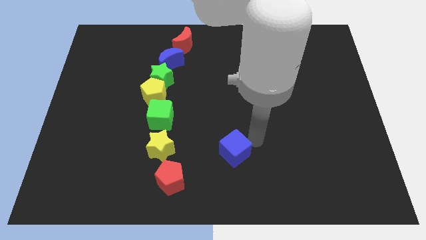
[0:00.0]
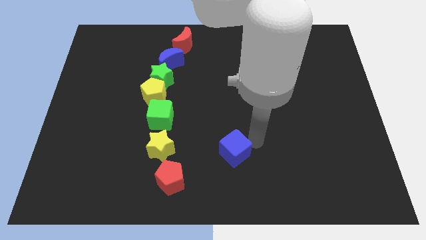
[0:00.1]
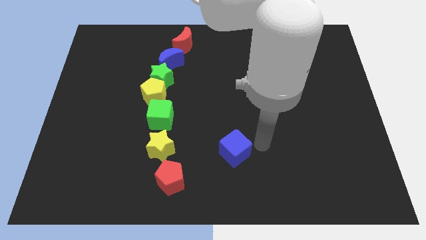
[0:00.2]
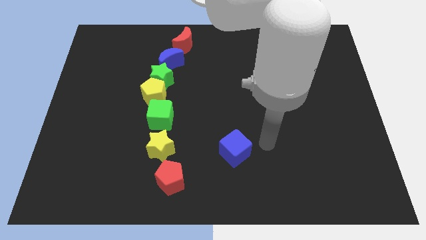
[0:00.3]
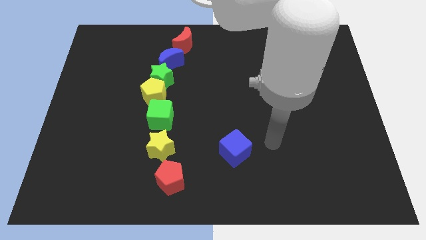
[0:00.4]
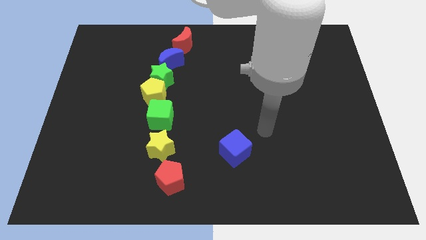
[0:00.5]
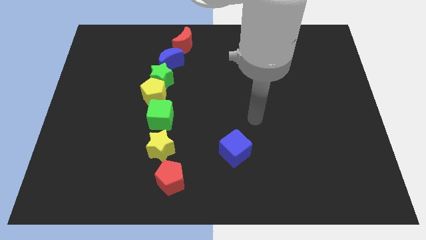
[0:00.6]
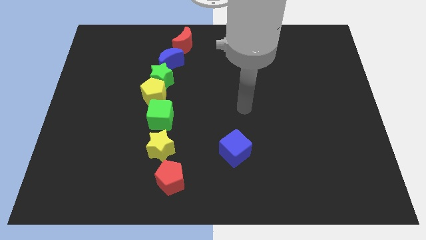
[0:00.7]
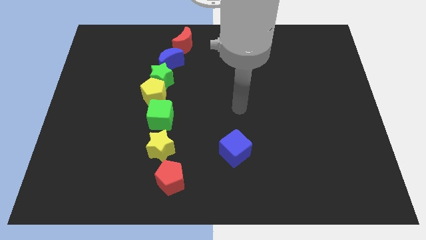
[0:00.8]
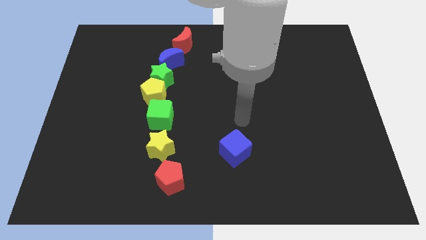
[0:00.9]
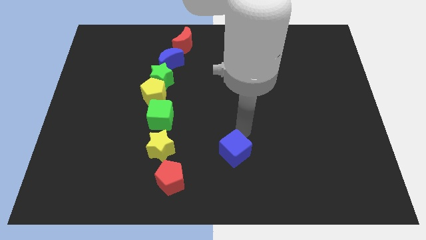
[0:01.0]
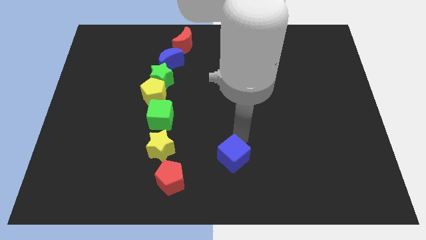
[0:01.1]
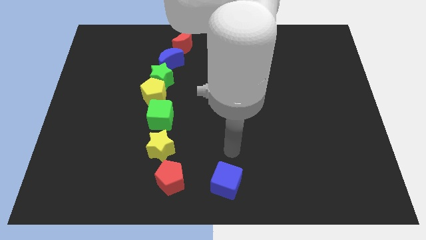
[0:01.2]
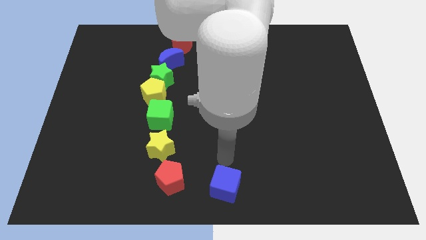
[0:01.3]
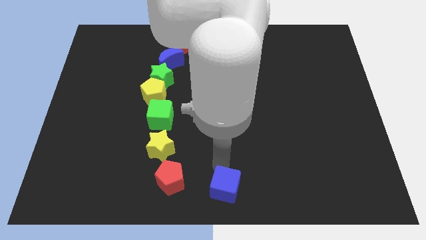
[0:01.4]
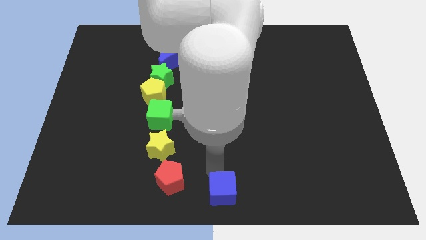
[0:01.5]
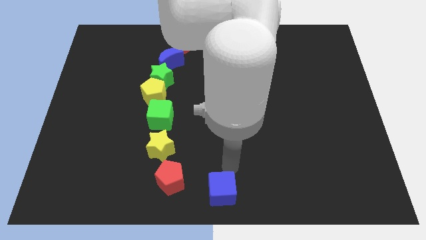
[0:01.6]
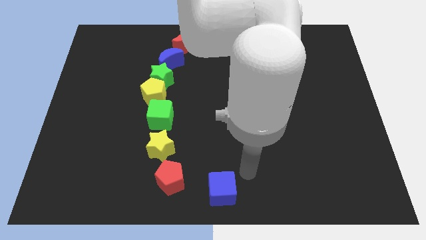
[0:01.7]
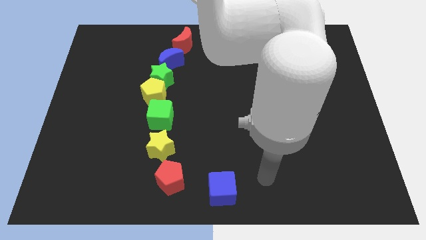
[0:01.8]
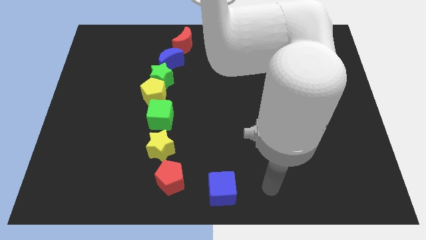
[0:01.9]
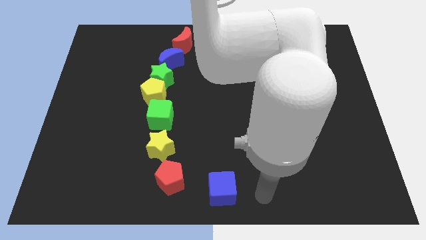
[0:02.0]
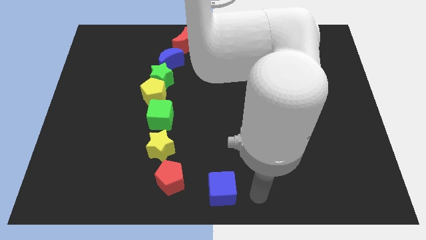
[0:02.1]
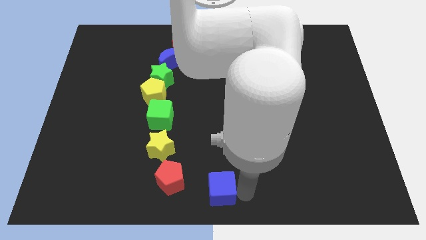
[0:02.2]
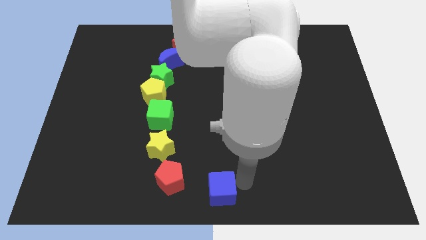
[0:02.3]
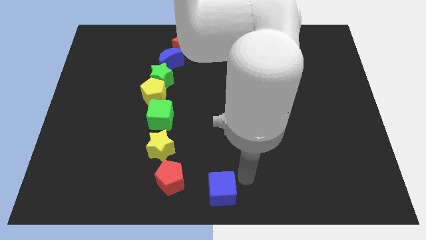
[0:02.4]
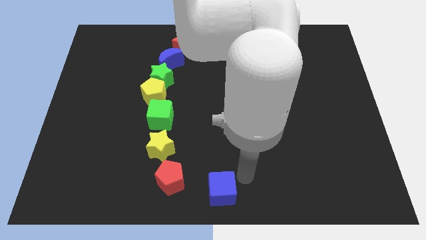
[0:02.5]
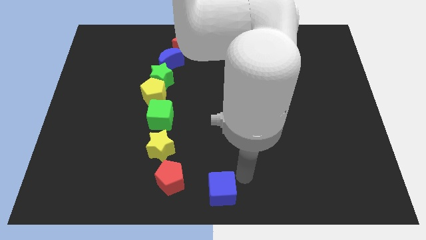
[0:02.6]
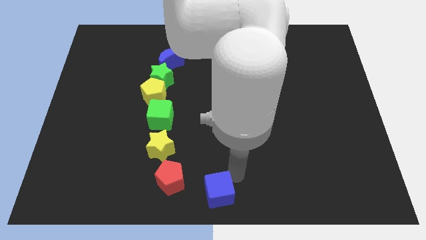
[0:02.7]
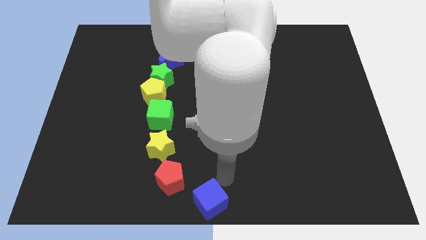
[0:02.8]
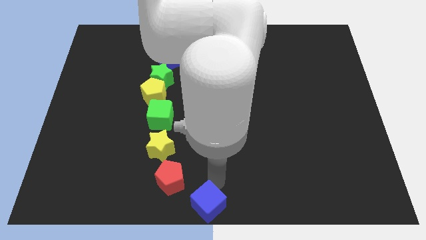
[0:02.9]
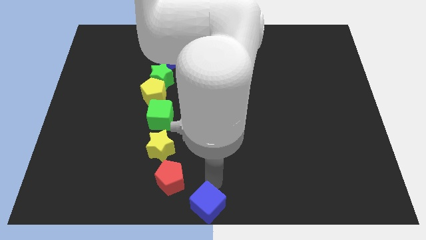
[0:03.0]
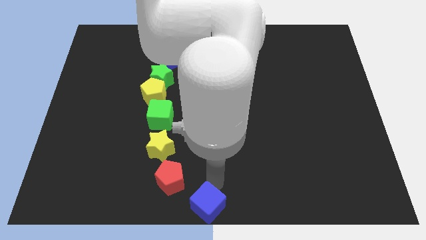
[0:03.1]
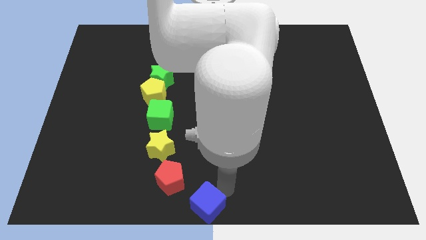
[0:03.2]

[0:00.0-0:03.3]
place the blue cube diagonally below the bottom right side of the red pentagon

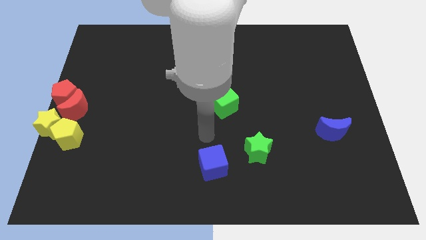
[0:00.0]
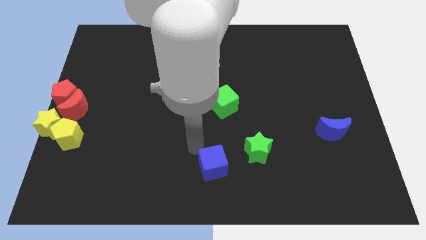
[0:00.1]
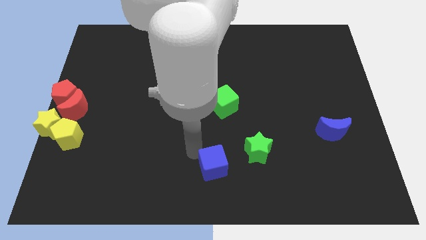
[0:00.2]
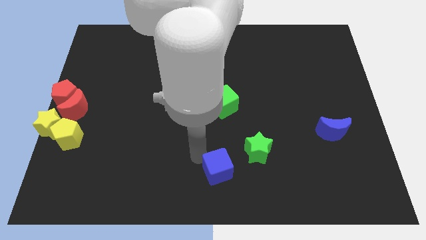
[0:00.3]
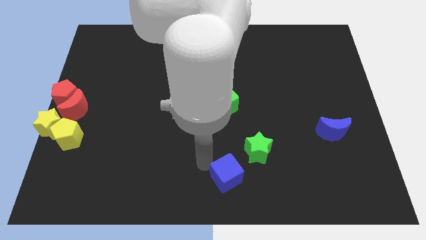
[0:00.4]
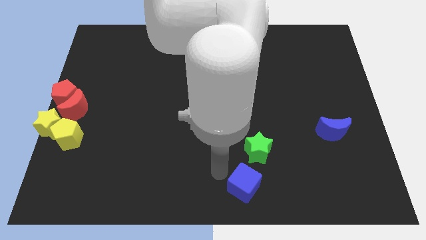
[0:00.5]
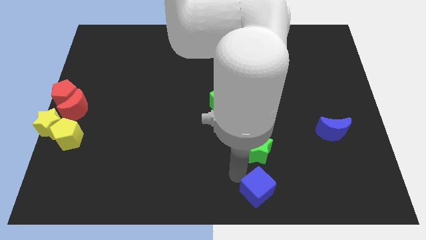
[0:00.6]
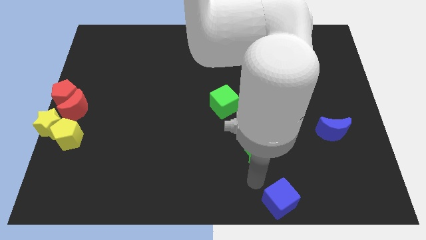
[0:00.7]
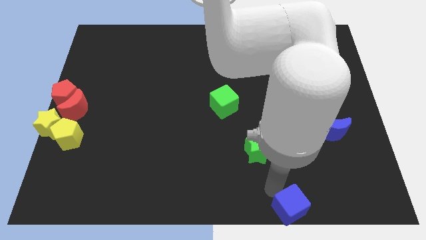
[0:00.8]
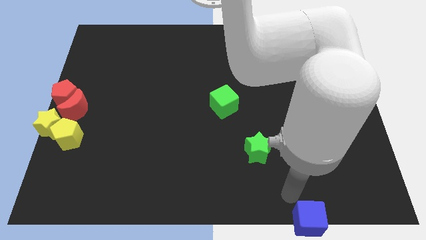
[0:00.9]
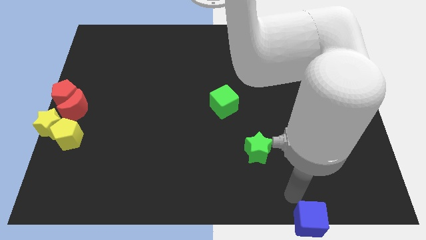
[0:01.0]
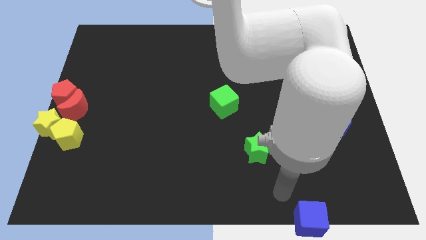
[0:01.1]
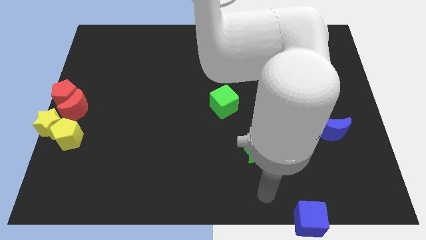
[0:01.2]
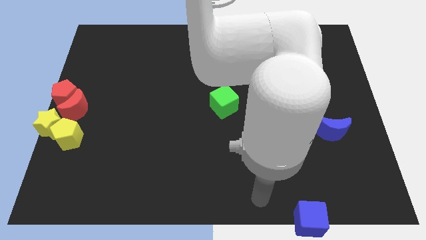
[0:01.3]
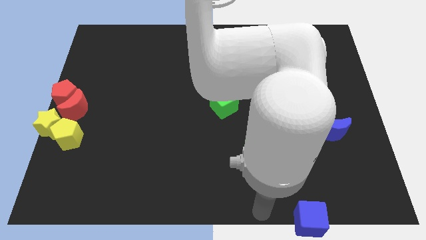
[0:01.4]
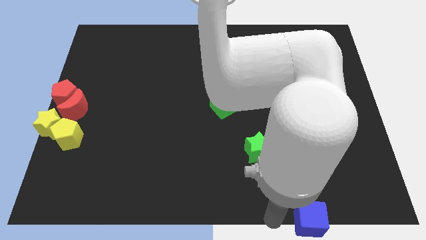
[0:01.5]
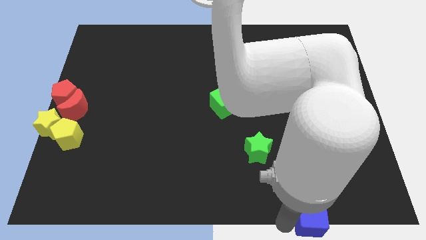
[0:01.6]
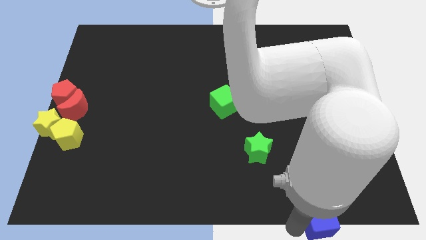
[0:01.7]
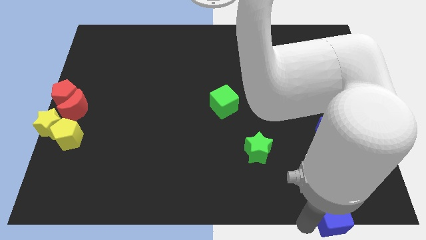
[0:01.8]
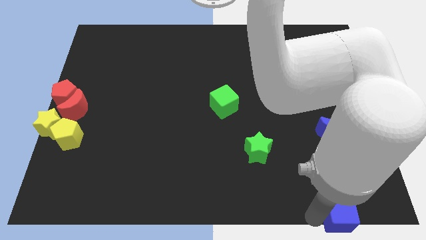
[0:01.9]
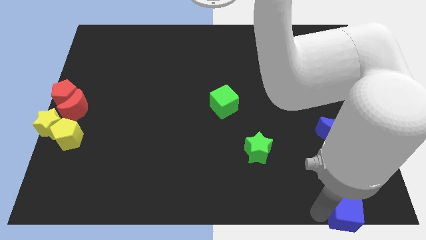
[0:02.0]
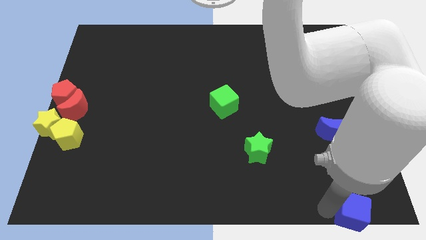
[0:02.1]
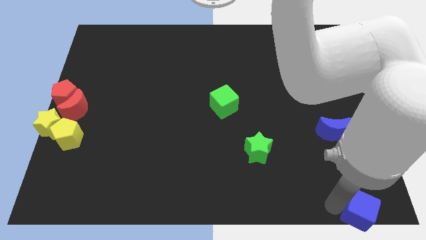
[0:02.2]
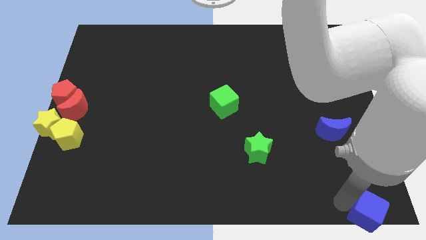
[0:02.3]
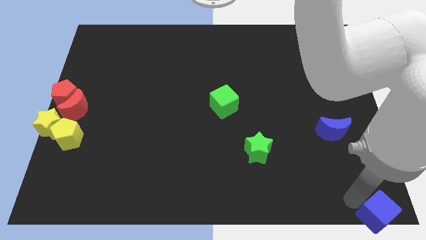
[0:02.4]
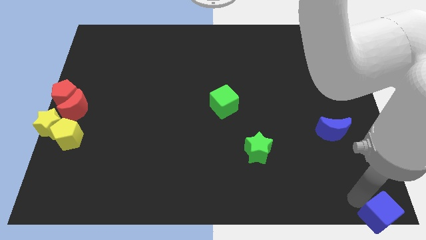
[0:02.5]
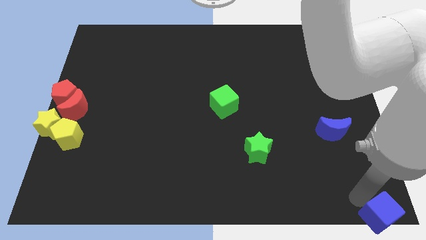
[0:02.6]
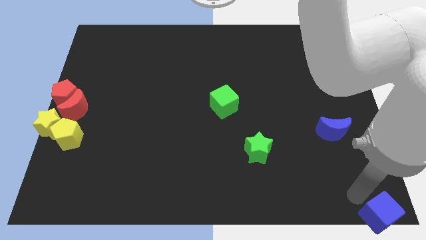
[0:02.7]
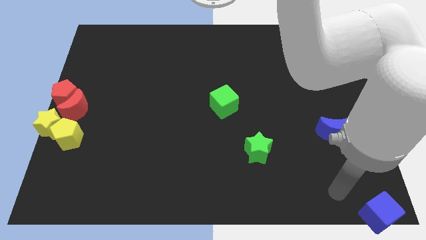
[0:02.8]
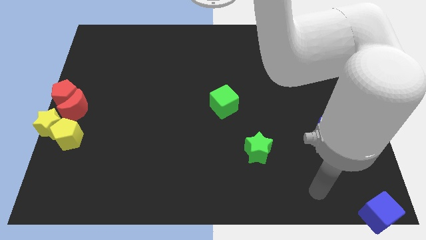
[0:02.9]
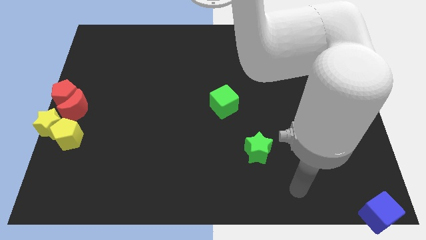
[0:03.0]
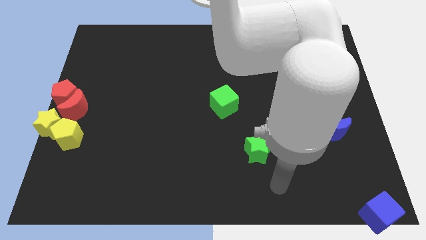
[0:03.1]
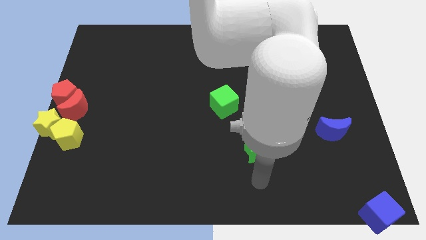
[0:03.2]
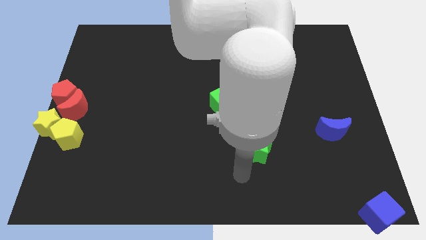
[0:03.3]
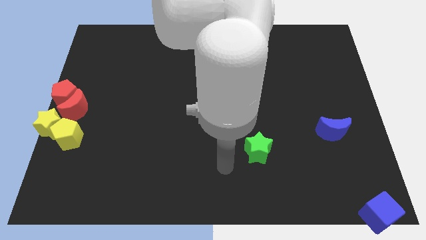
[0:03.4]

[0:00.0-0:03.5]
push the blue cube to the bottom right corner

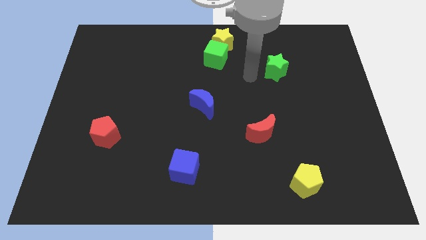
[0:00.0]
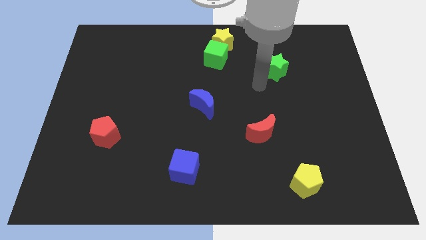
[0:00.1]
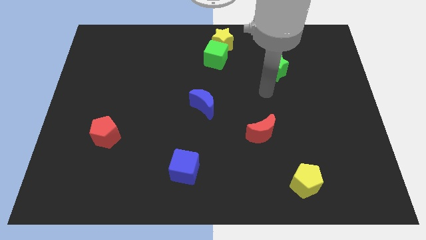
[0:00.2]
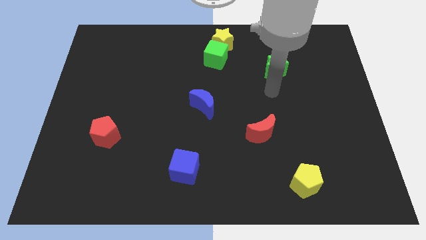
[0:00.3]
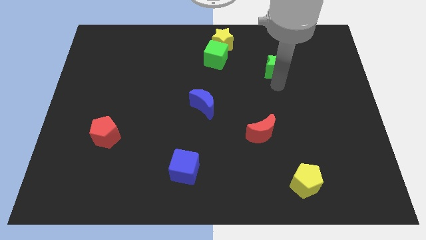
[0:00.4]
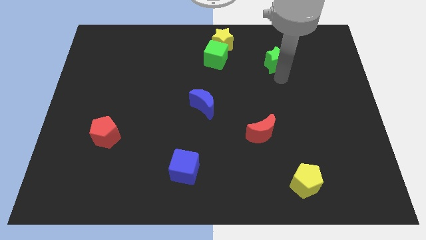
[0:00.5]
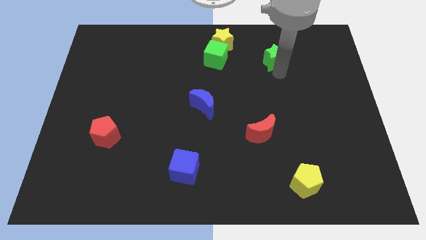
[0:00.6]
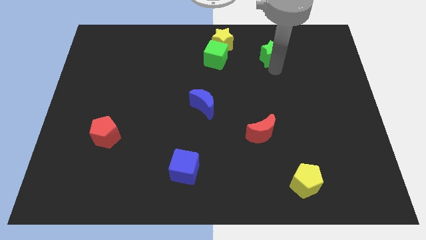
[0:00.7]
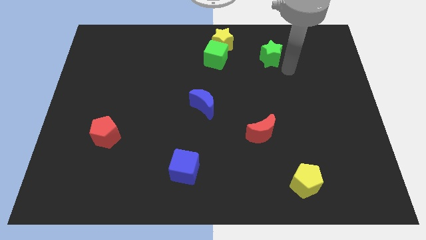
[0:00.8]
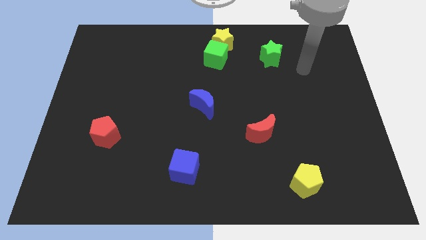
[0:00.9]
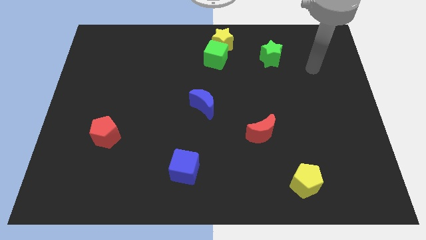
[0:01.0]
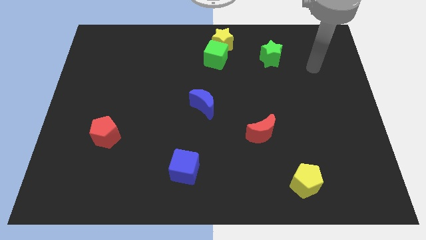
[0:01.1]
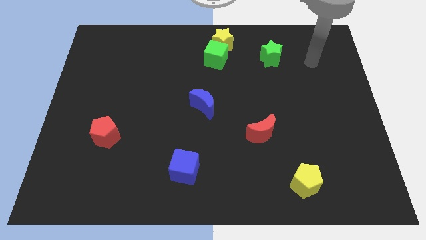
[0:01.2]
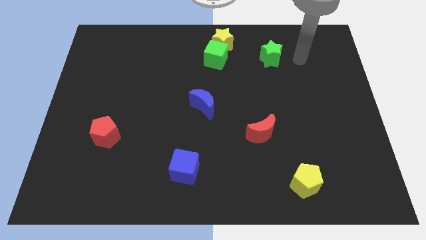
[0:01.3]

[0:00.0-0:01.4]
put the green star parallel to the green cube

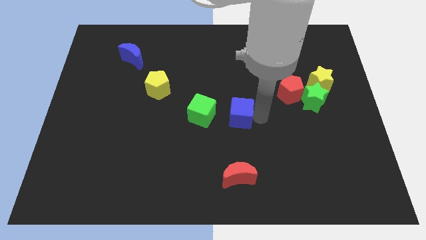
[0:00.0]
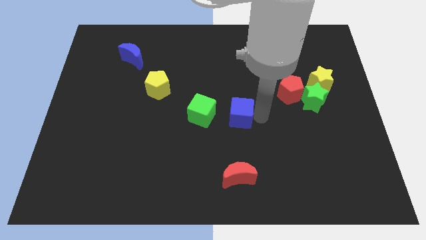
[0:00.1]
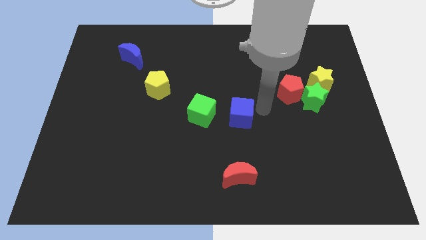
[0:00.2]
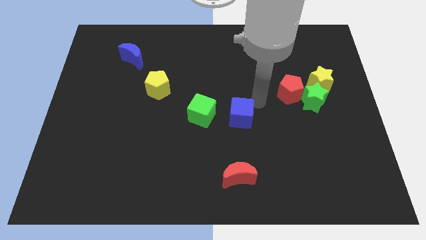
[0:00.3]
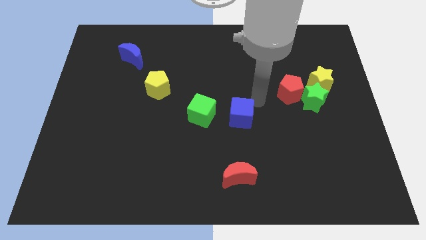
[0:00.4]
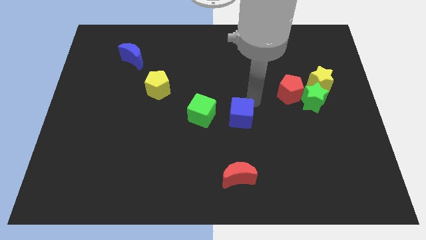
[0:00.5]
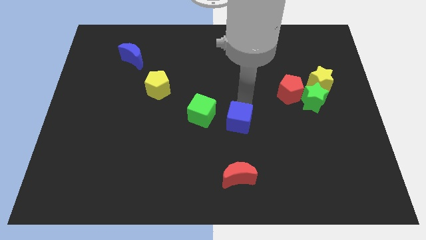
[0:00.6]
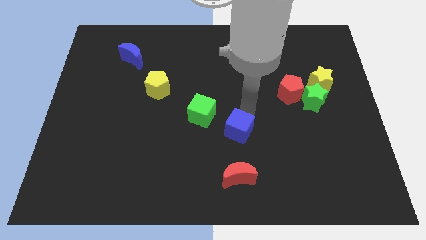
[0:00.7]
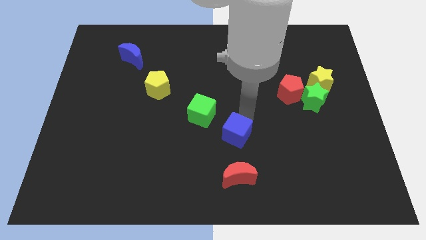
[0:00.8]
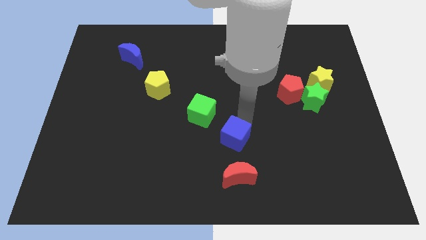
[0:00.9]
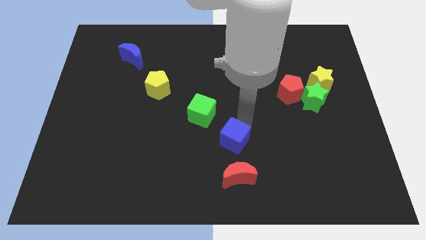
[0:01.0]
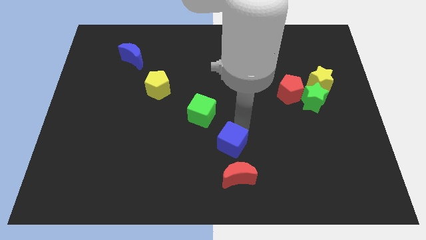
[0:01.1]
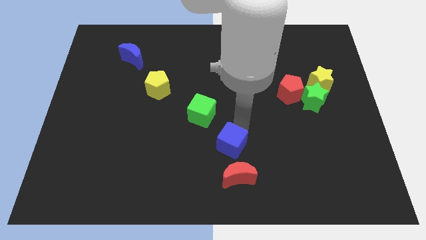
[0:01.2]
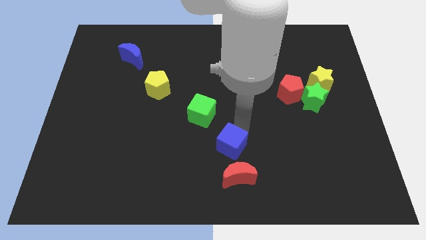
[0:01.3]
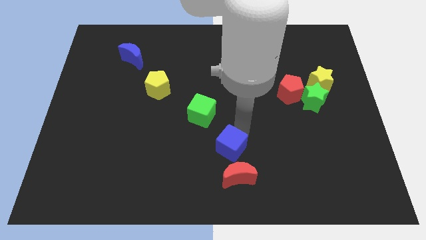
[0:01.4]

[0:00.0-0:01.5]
push the blue square in between green square and red crescent
